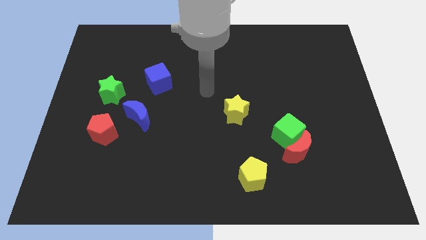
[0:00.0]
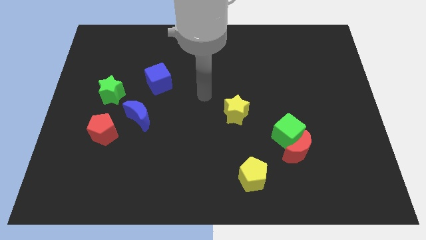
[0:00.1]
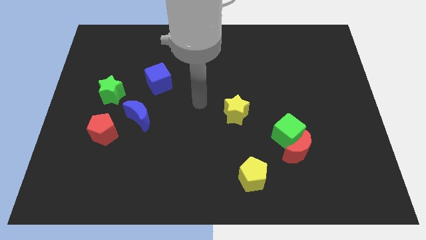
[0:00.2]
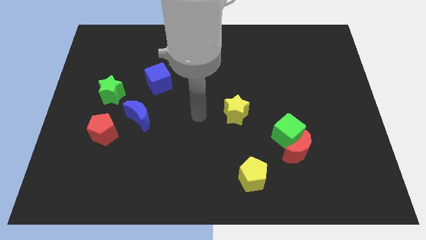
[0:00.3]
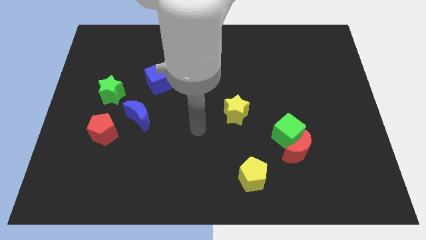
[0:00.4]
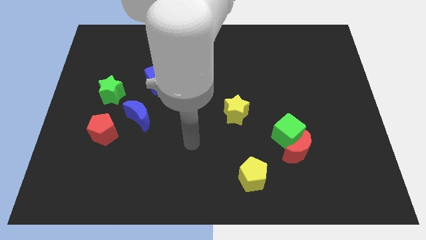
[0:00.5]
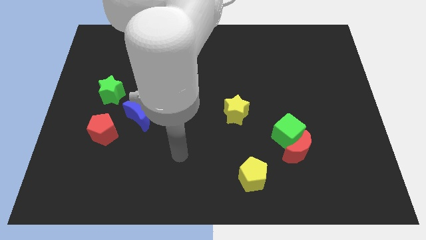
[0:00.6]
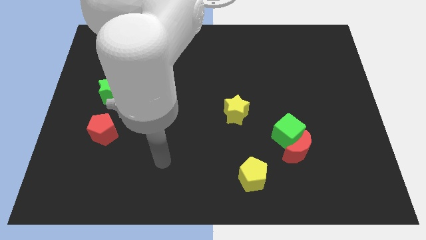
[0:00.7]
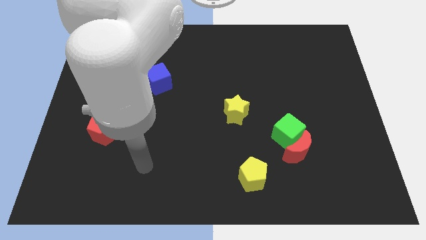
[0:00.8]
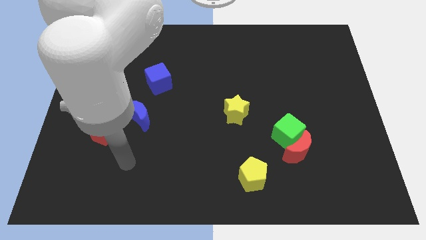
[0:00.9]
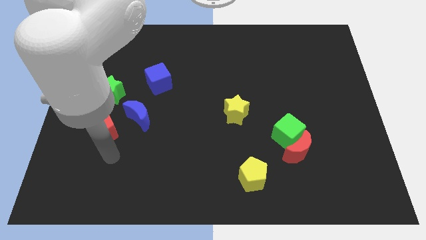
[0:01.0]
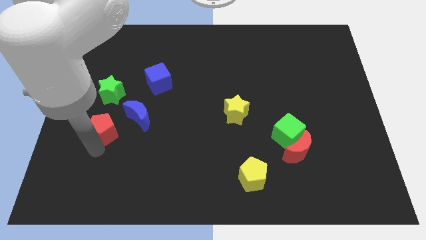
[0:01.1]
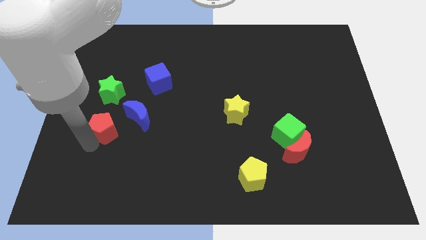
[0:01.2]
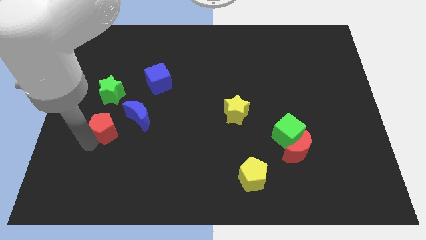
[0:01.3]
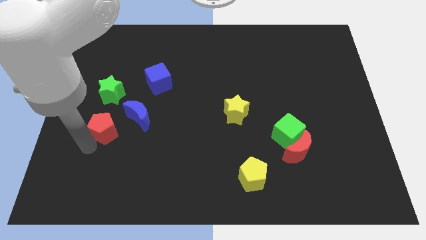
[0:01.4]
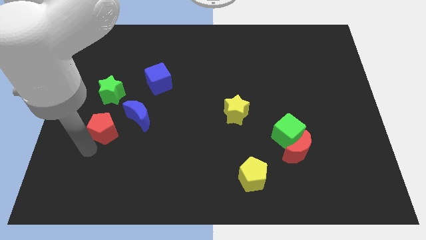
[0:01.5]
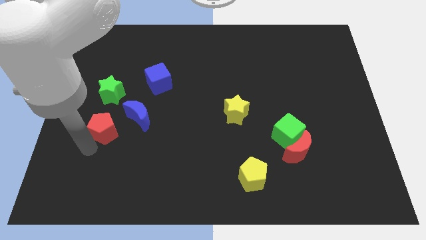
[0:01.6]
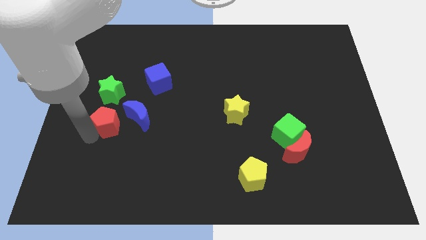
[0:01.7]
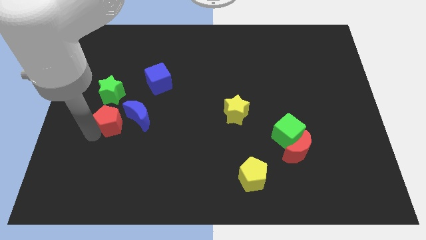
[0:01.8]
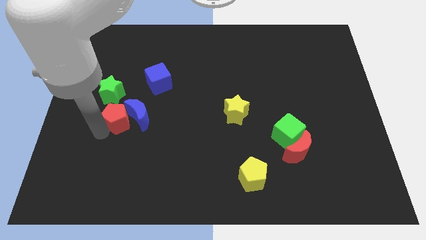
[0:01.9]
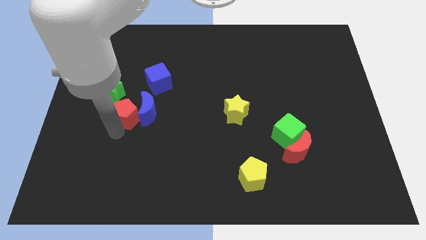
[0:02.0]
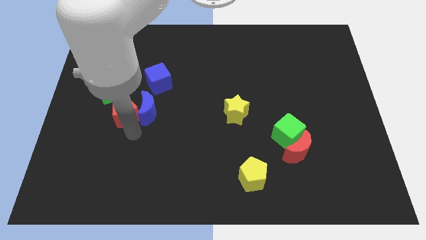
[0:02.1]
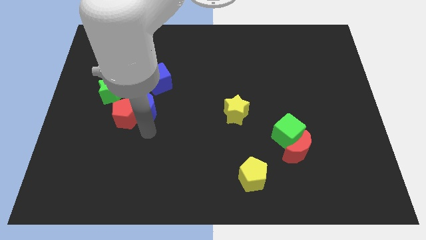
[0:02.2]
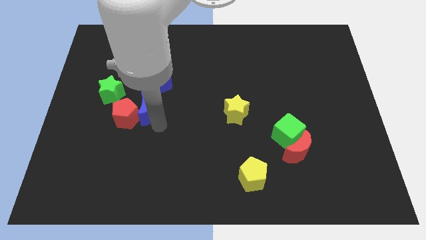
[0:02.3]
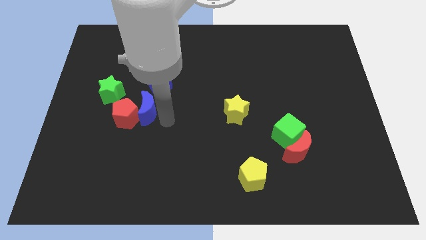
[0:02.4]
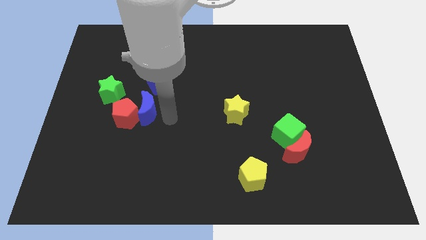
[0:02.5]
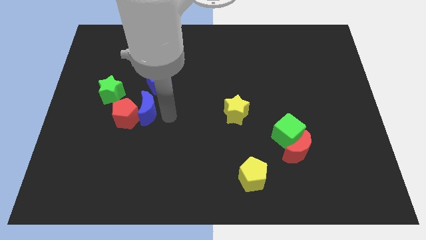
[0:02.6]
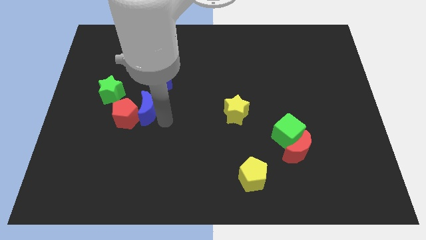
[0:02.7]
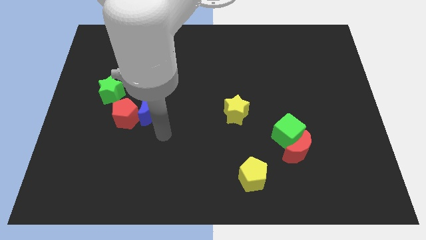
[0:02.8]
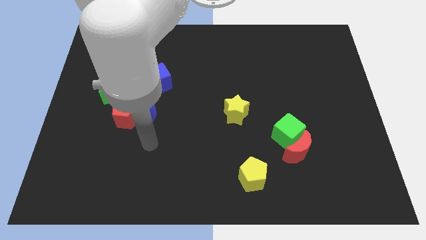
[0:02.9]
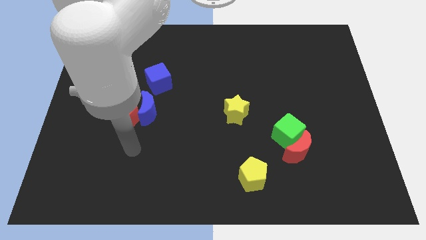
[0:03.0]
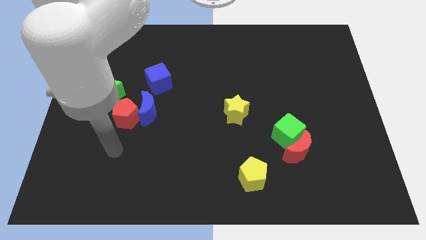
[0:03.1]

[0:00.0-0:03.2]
move red pentagon into blue moon

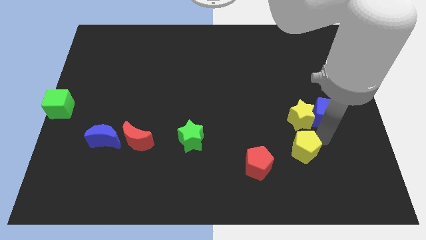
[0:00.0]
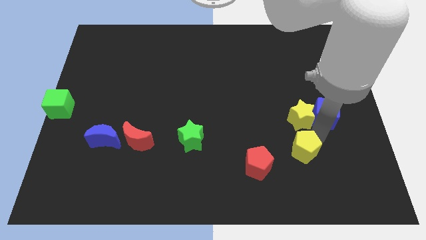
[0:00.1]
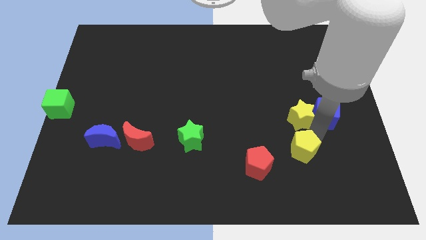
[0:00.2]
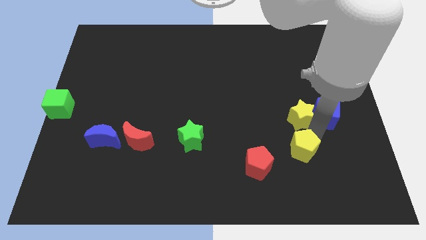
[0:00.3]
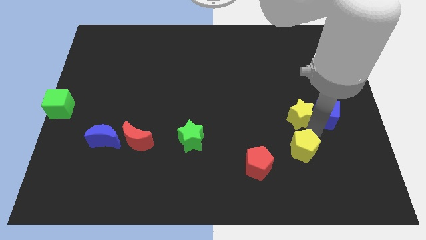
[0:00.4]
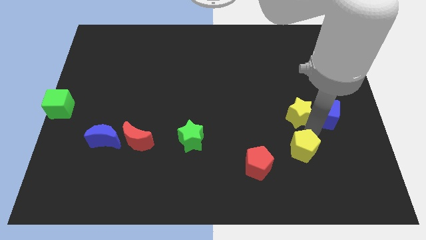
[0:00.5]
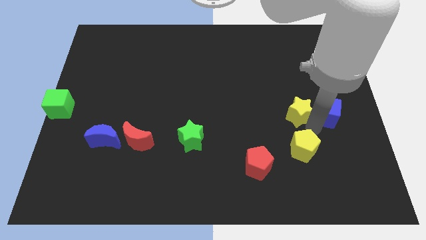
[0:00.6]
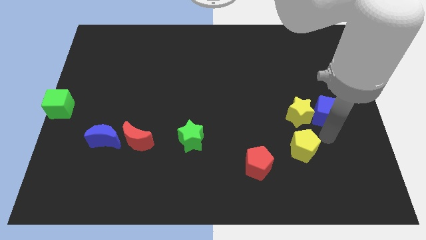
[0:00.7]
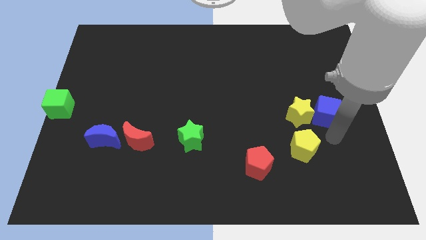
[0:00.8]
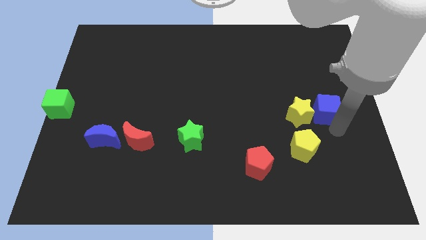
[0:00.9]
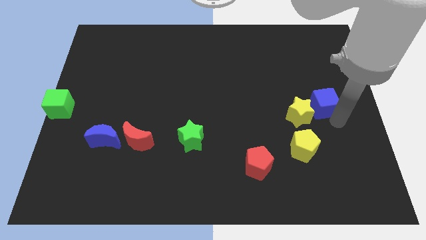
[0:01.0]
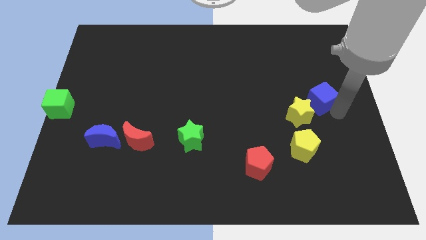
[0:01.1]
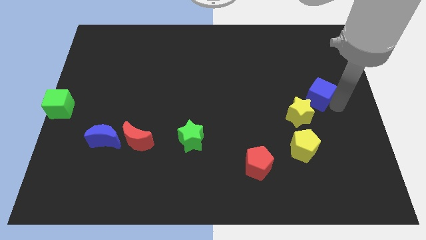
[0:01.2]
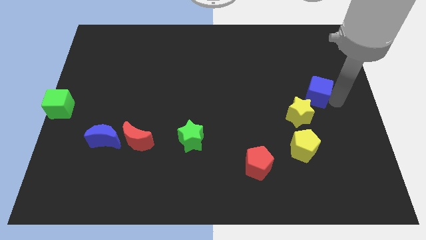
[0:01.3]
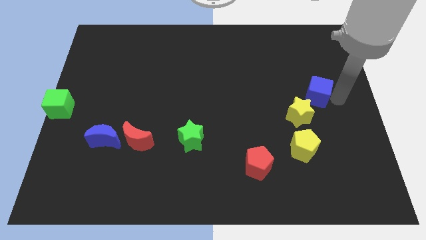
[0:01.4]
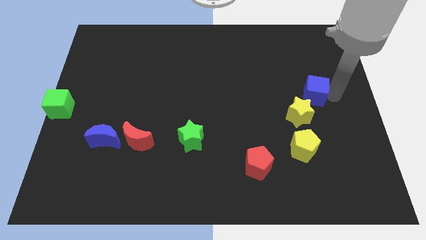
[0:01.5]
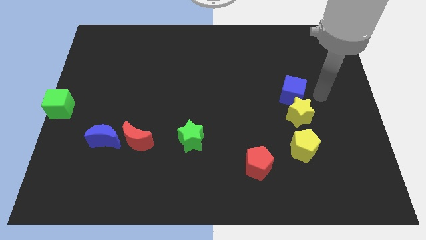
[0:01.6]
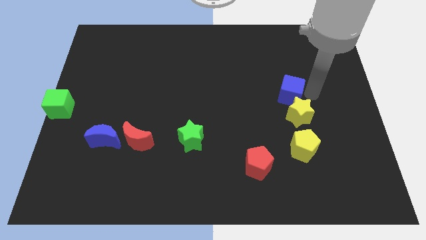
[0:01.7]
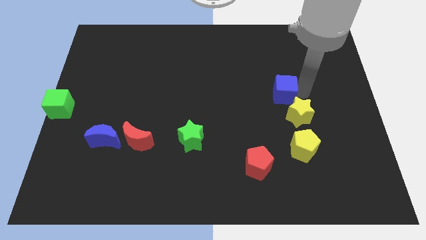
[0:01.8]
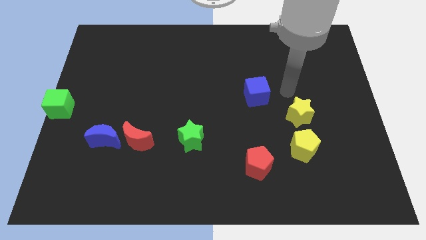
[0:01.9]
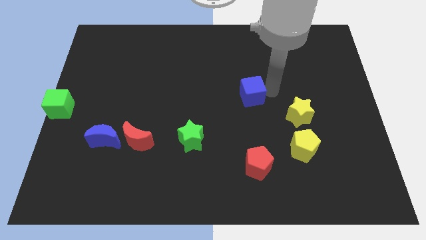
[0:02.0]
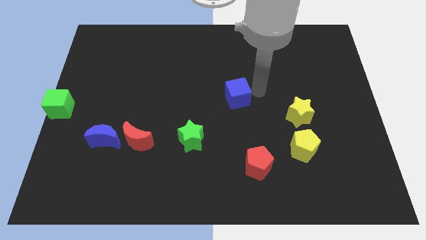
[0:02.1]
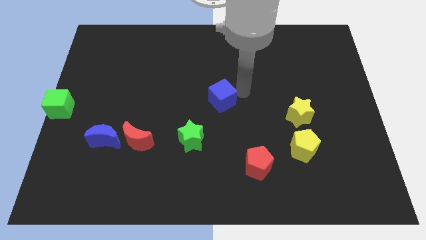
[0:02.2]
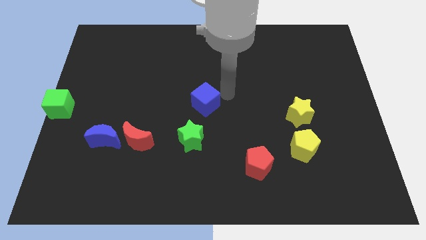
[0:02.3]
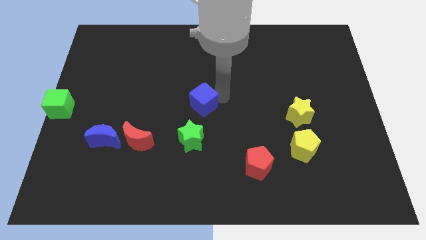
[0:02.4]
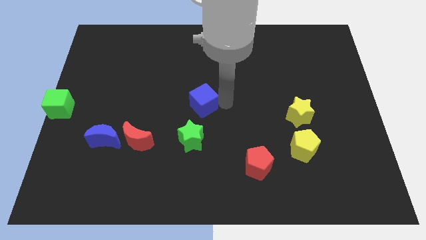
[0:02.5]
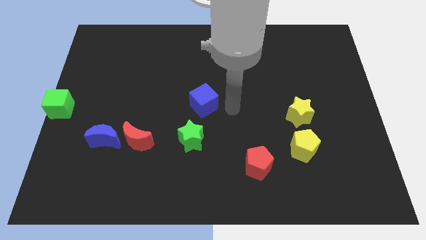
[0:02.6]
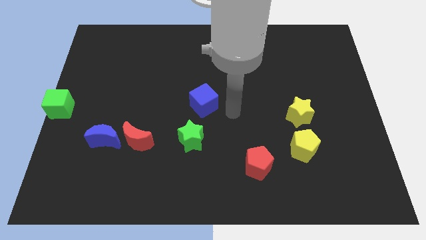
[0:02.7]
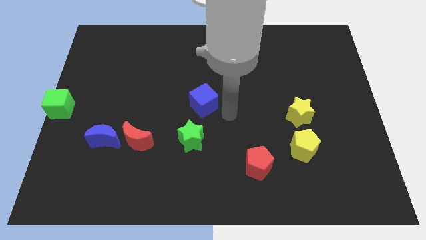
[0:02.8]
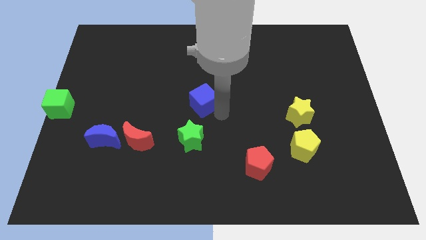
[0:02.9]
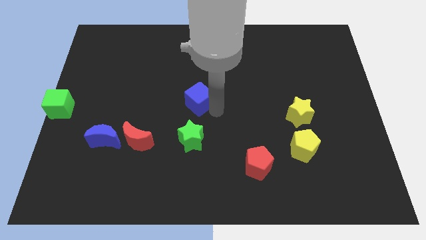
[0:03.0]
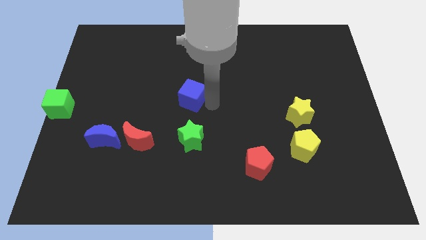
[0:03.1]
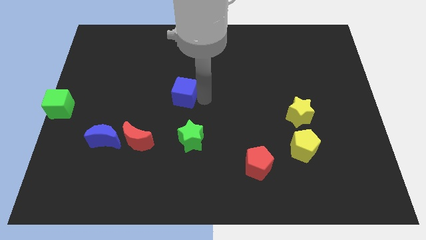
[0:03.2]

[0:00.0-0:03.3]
move the blue cube above green star

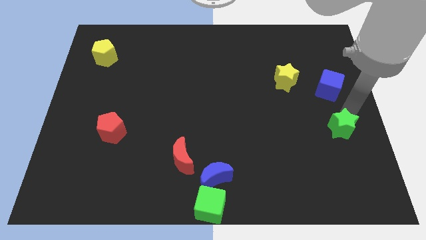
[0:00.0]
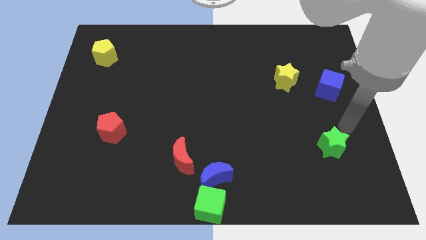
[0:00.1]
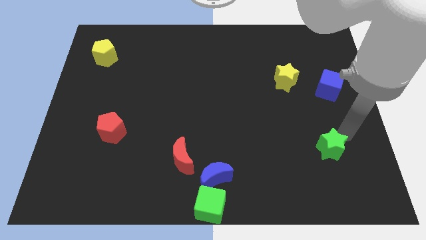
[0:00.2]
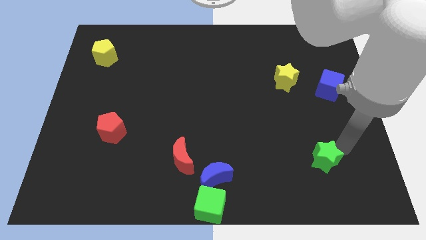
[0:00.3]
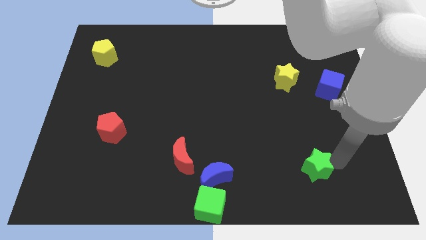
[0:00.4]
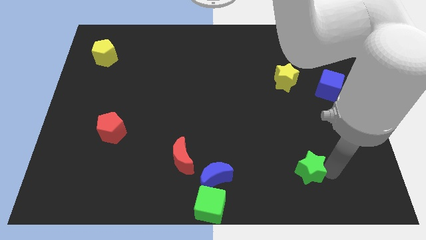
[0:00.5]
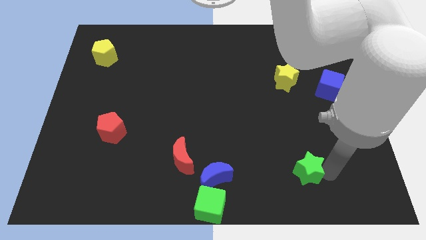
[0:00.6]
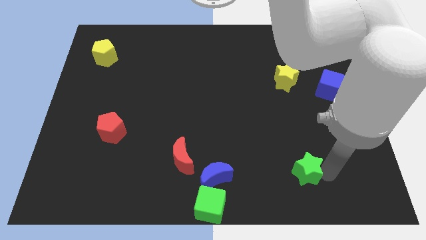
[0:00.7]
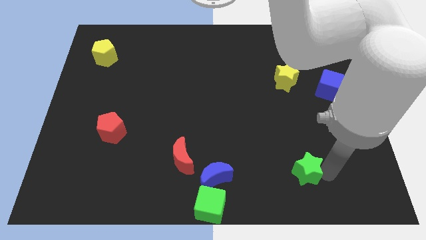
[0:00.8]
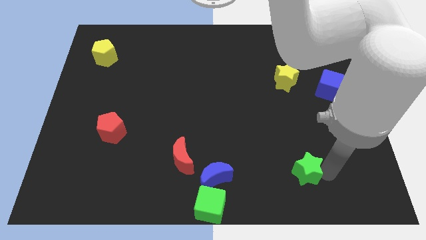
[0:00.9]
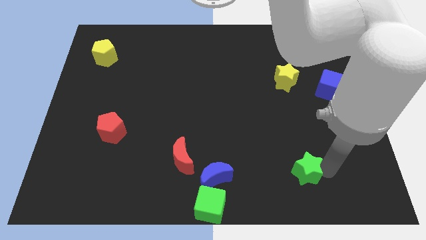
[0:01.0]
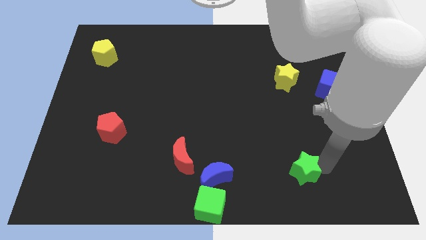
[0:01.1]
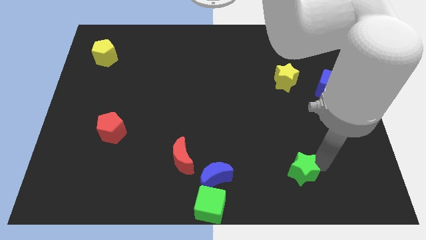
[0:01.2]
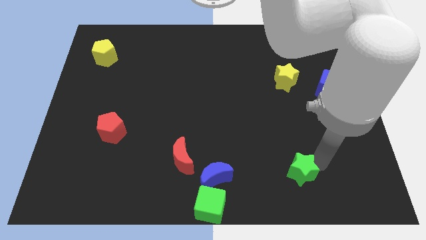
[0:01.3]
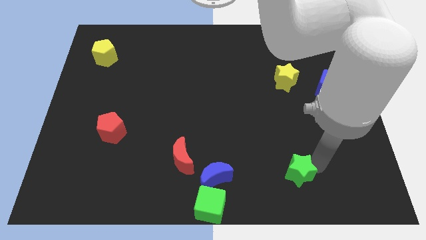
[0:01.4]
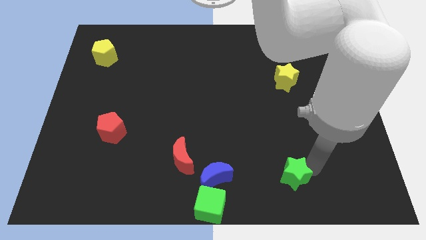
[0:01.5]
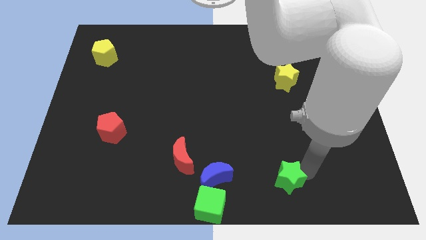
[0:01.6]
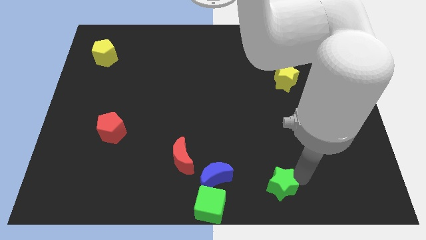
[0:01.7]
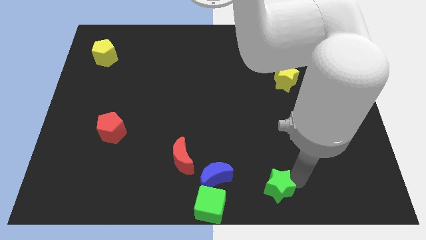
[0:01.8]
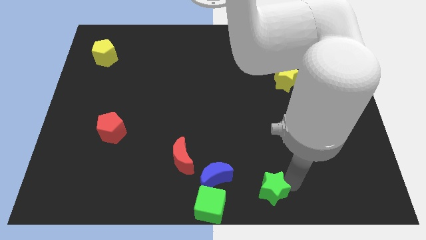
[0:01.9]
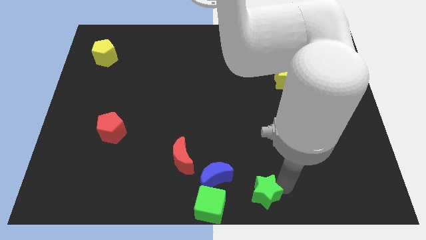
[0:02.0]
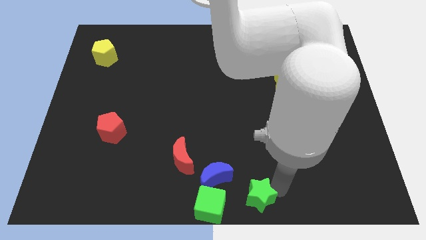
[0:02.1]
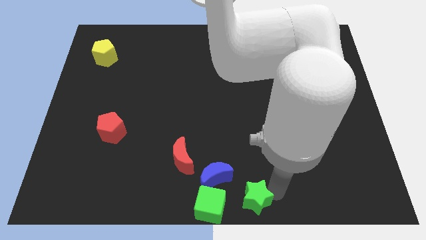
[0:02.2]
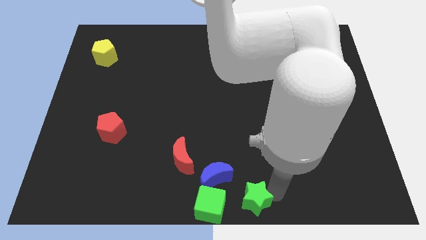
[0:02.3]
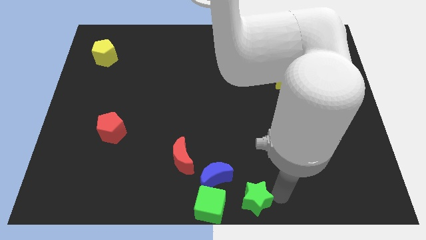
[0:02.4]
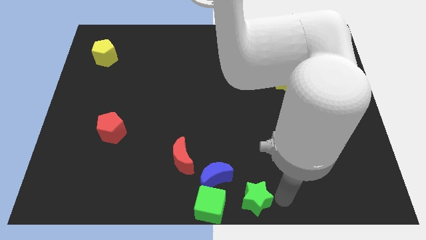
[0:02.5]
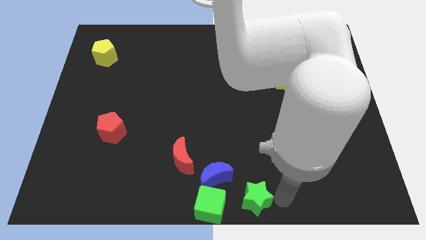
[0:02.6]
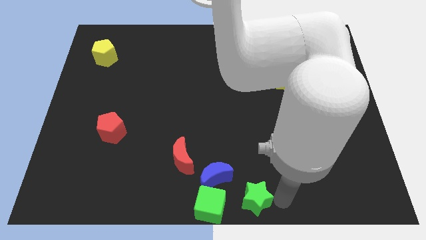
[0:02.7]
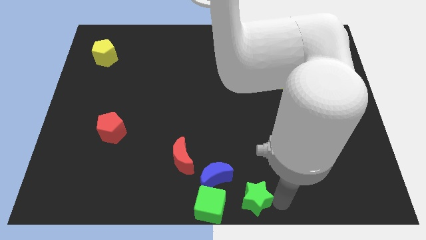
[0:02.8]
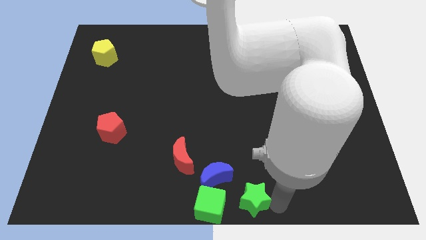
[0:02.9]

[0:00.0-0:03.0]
place the green star right to the blue moon
